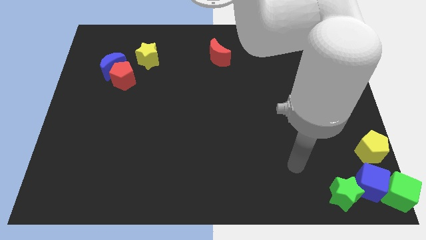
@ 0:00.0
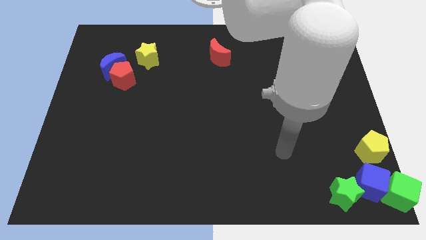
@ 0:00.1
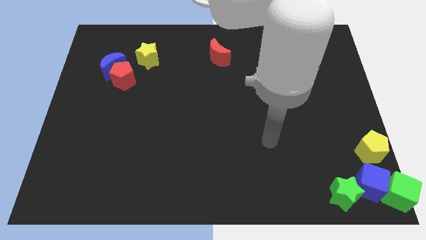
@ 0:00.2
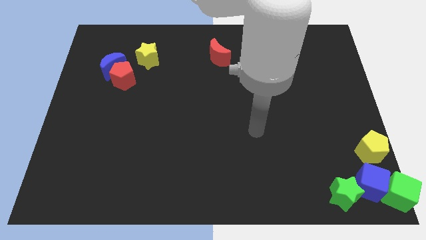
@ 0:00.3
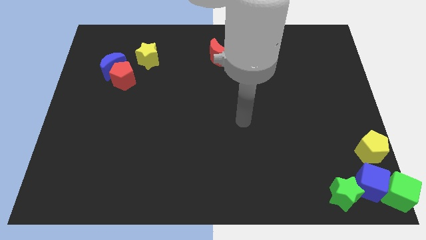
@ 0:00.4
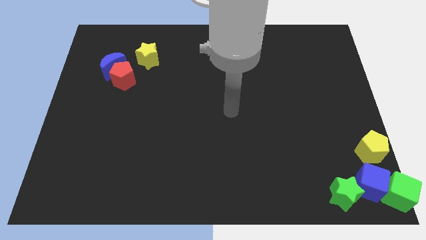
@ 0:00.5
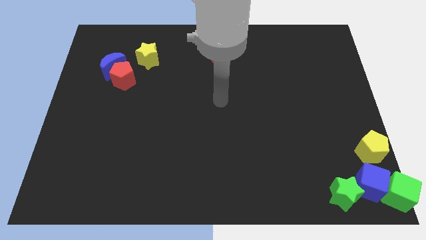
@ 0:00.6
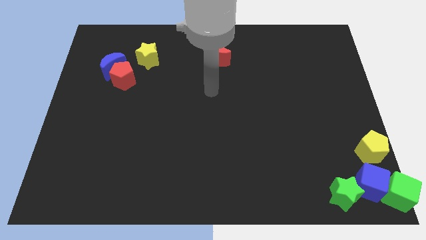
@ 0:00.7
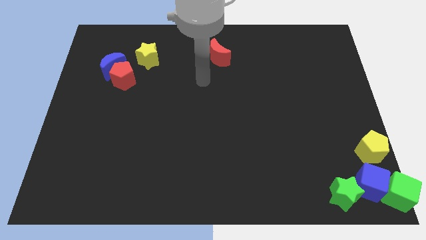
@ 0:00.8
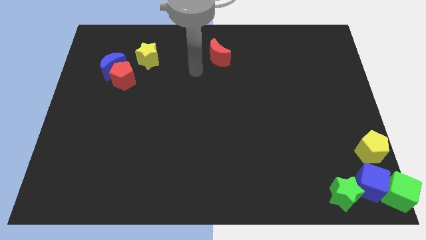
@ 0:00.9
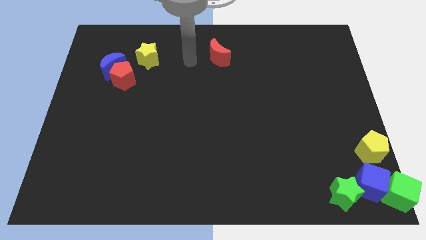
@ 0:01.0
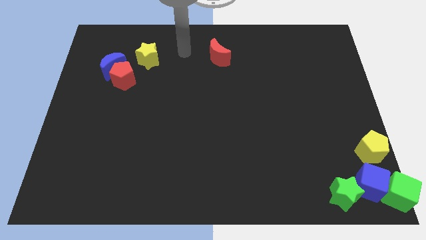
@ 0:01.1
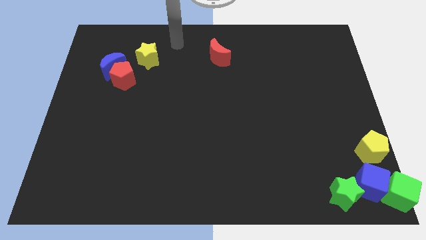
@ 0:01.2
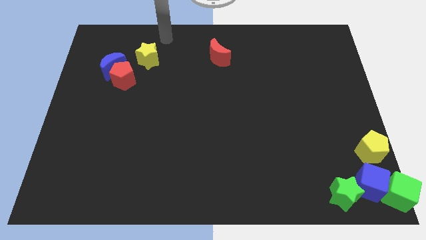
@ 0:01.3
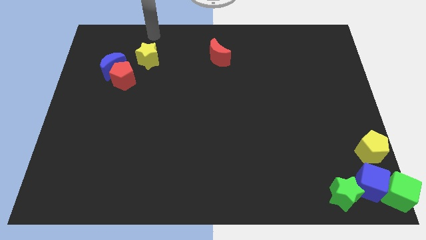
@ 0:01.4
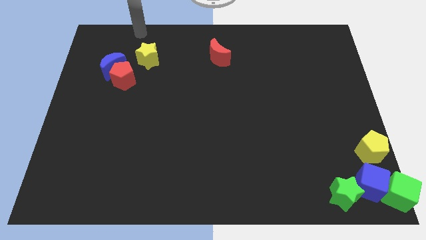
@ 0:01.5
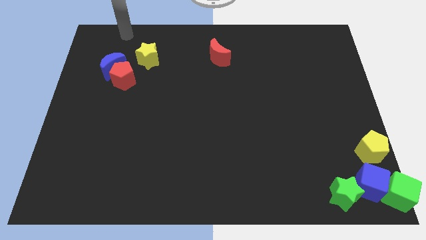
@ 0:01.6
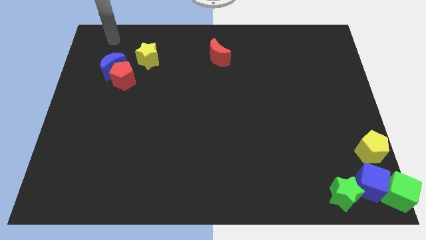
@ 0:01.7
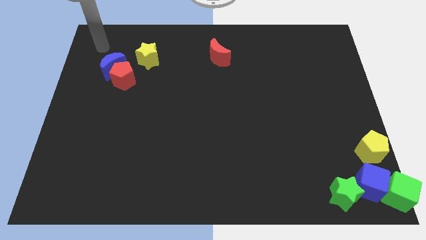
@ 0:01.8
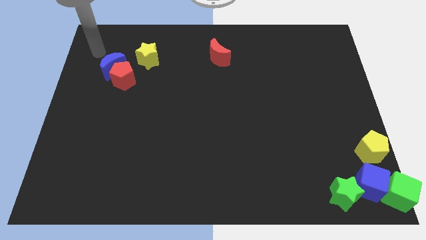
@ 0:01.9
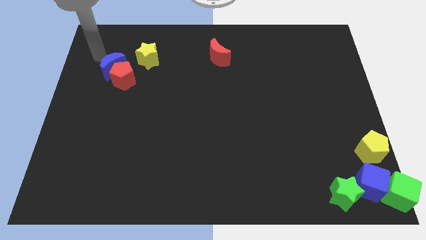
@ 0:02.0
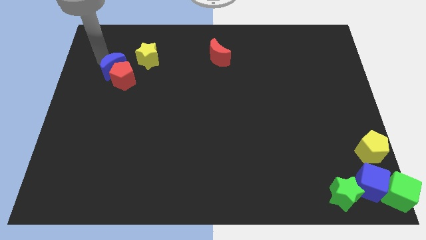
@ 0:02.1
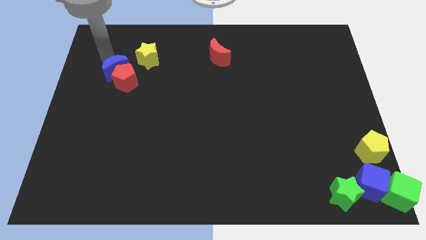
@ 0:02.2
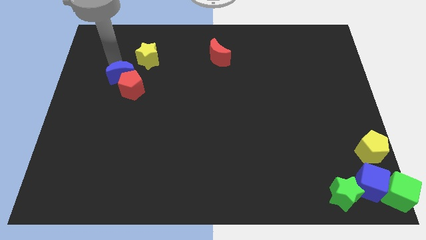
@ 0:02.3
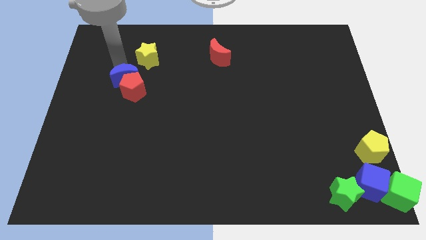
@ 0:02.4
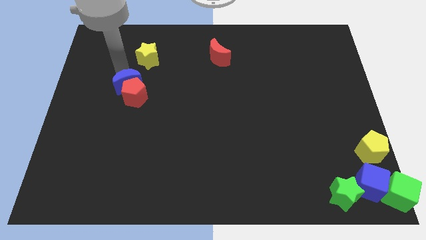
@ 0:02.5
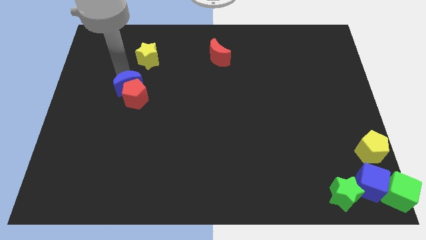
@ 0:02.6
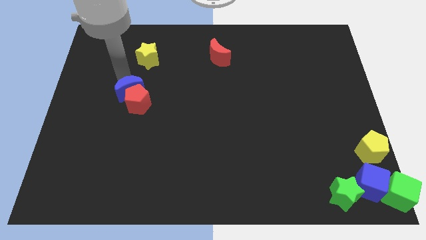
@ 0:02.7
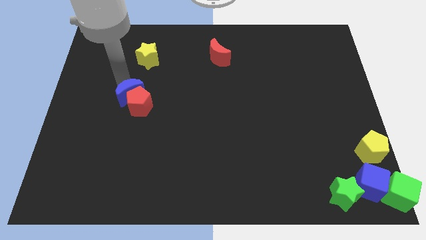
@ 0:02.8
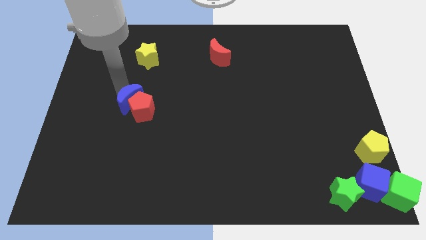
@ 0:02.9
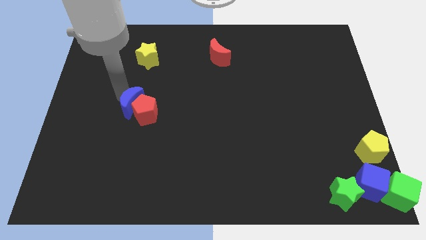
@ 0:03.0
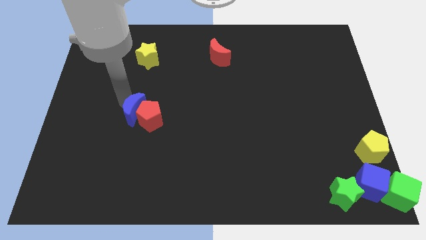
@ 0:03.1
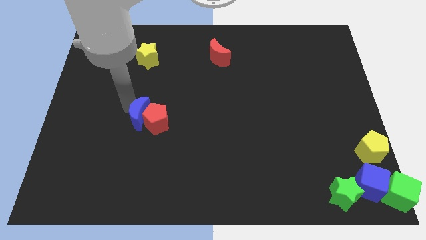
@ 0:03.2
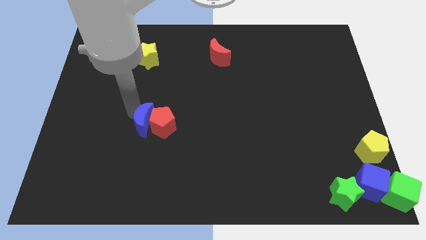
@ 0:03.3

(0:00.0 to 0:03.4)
push blue crescent below yellow star

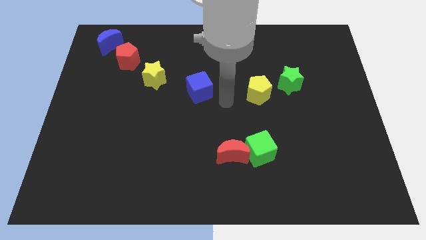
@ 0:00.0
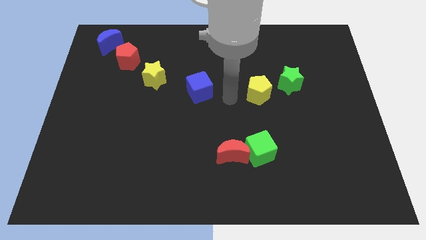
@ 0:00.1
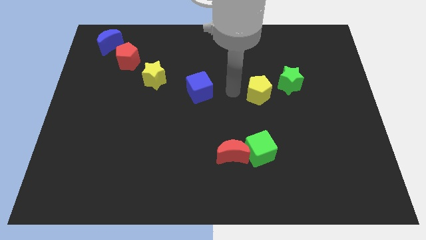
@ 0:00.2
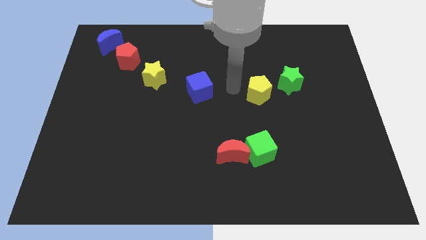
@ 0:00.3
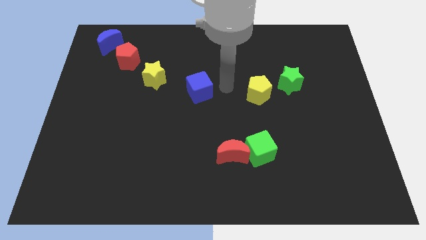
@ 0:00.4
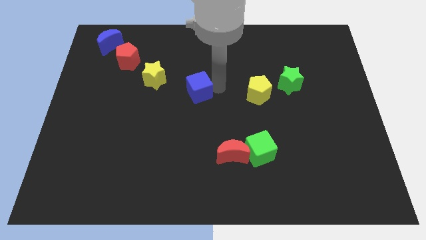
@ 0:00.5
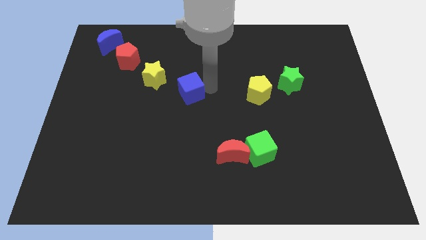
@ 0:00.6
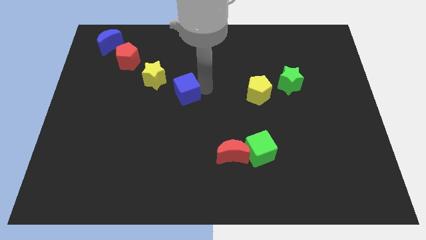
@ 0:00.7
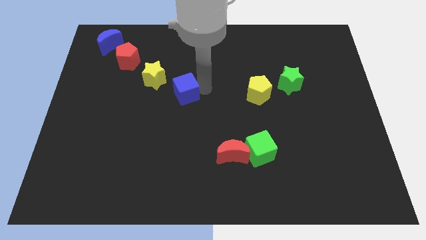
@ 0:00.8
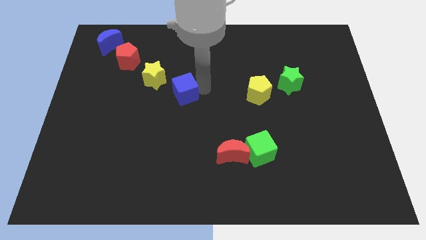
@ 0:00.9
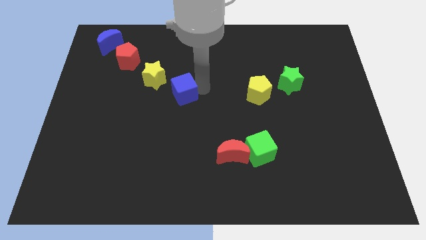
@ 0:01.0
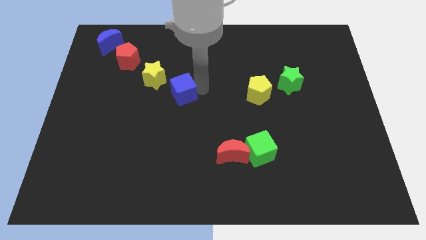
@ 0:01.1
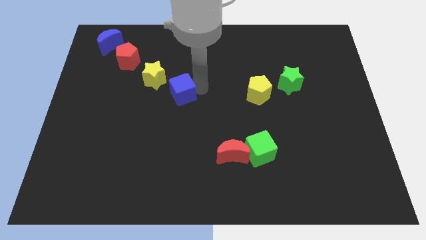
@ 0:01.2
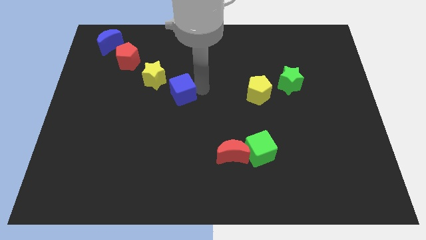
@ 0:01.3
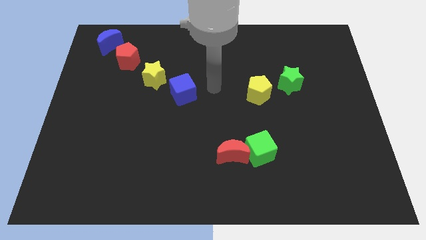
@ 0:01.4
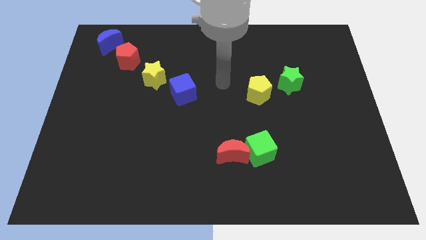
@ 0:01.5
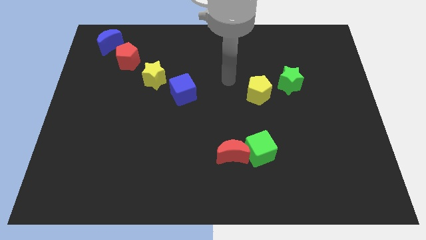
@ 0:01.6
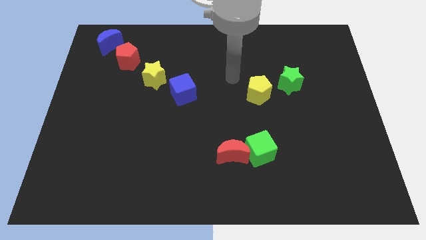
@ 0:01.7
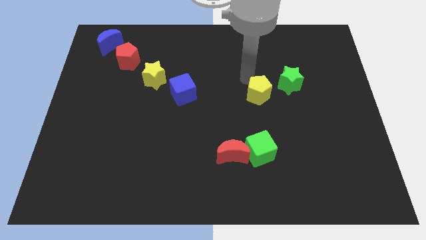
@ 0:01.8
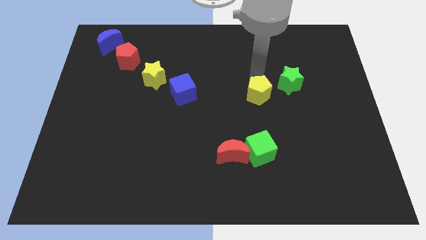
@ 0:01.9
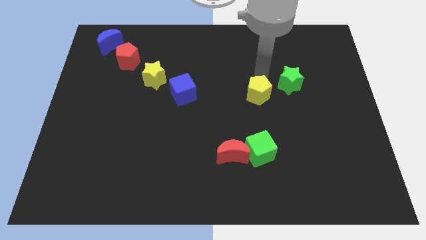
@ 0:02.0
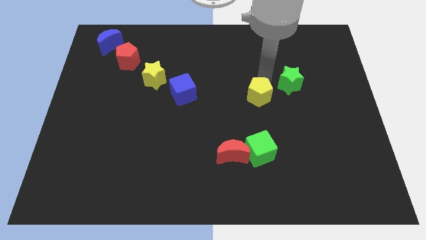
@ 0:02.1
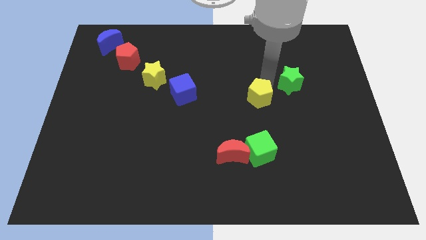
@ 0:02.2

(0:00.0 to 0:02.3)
place blue cube diagonally down to the yellow star

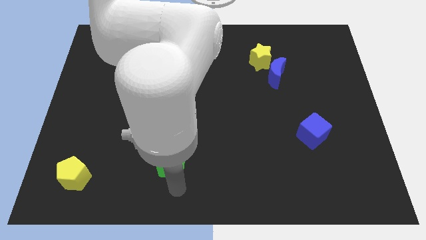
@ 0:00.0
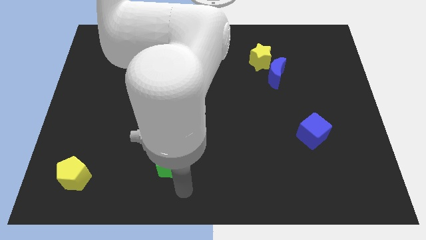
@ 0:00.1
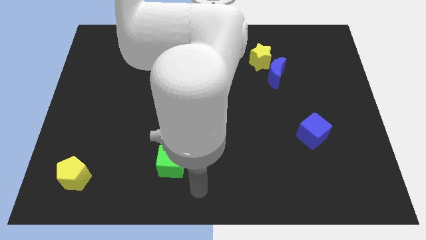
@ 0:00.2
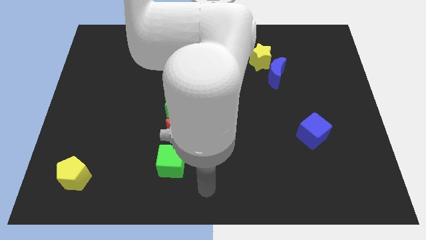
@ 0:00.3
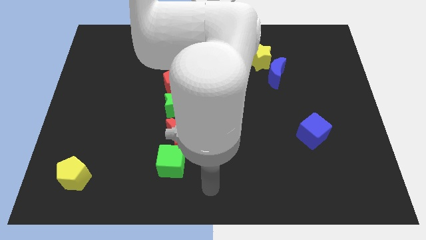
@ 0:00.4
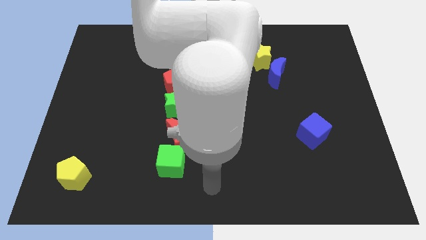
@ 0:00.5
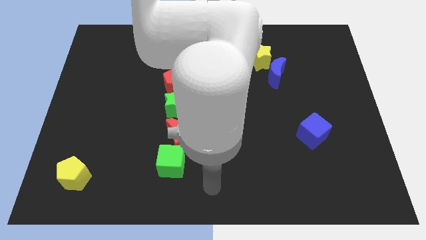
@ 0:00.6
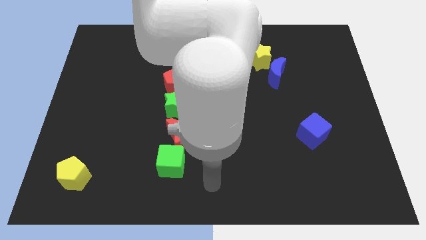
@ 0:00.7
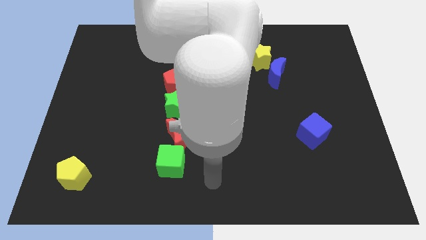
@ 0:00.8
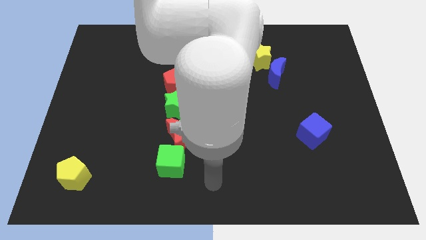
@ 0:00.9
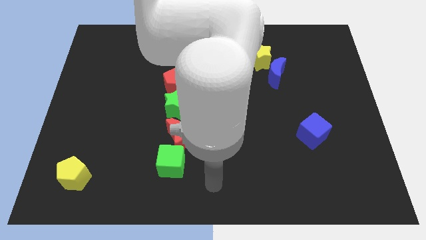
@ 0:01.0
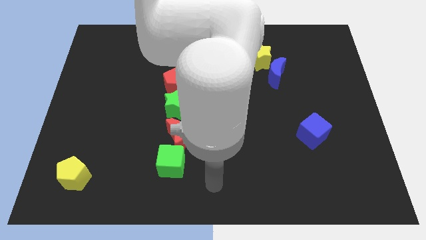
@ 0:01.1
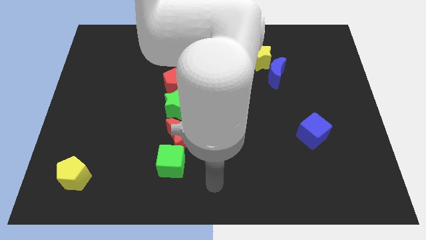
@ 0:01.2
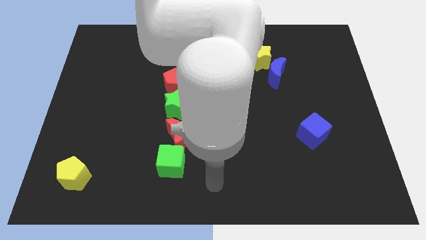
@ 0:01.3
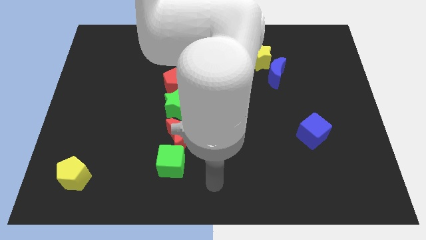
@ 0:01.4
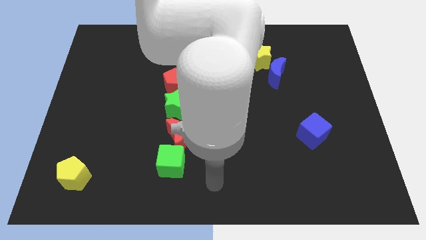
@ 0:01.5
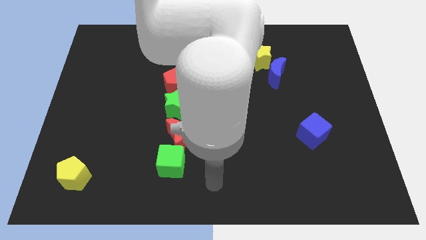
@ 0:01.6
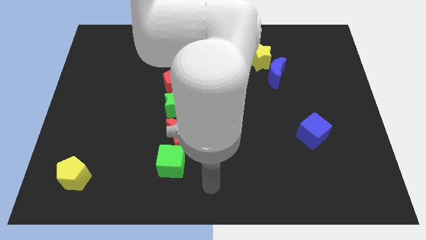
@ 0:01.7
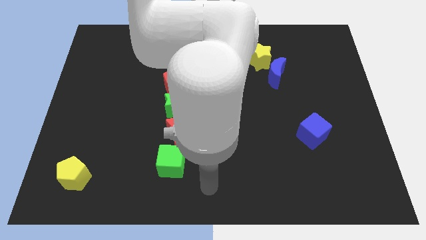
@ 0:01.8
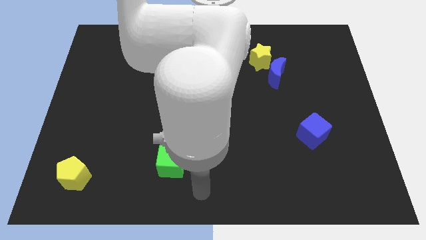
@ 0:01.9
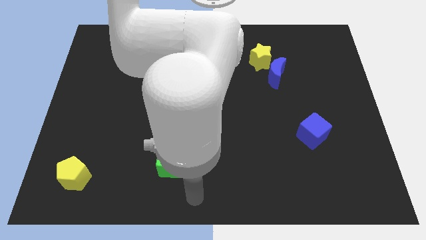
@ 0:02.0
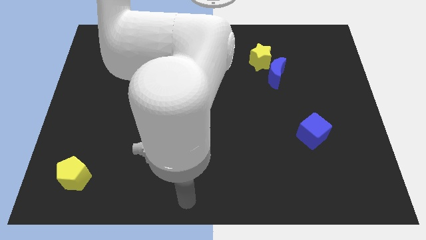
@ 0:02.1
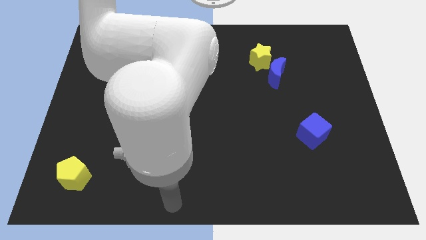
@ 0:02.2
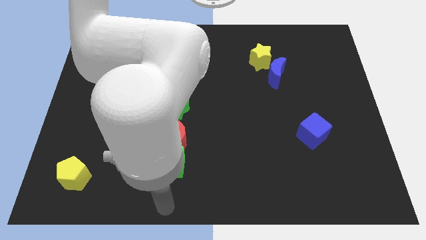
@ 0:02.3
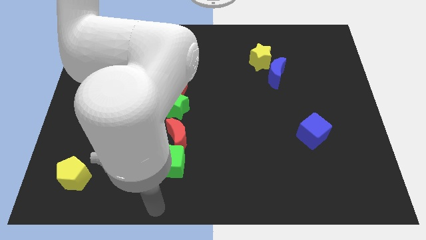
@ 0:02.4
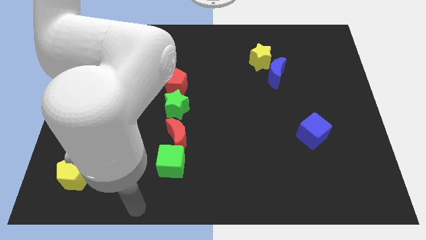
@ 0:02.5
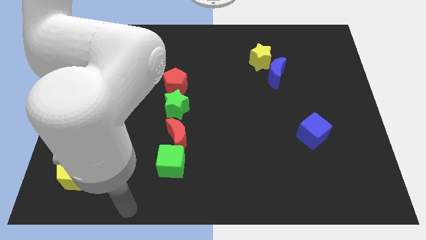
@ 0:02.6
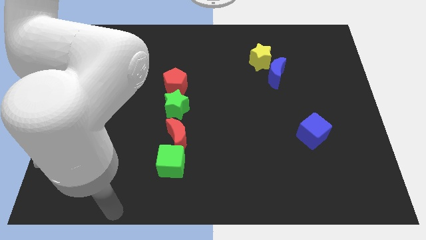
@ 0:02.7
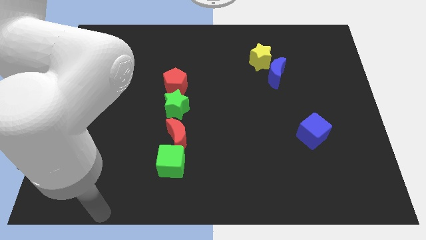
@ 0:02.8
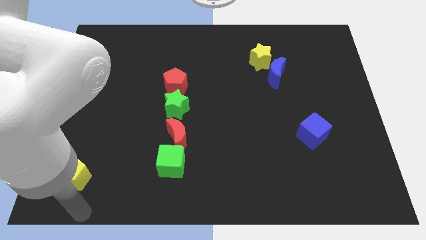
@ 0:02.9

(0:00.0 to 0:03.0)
move your arm and point towards yellow pentagon

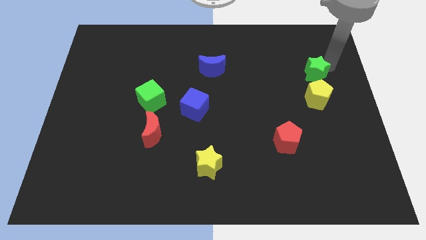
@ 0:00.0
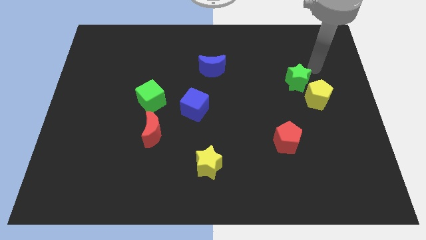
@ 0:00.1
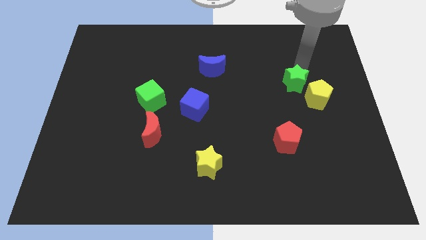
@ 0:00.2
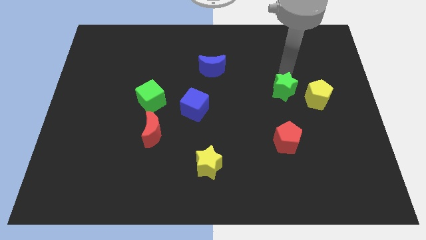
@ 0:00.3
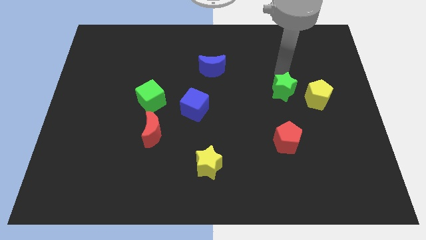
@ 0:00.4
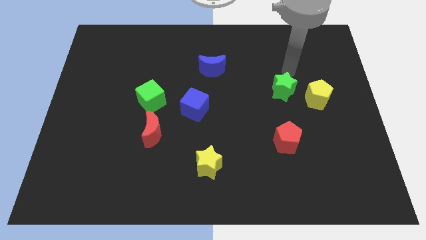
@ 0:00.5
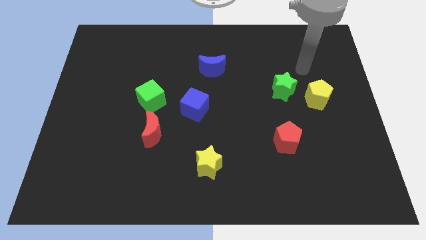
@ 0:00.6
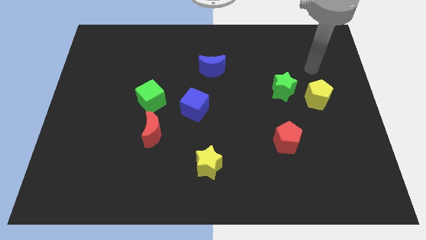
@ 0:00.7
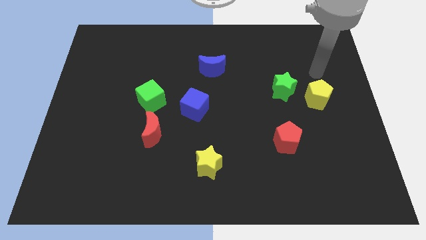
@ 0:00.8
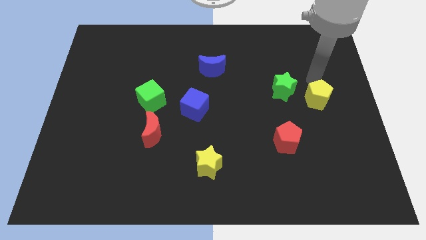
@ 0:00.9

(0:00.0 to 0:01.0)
move the green star to left side of the yellow pentagon
